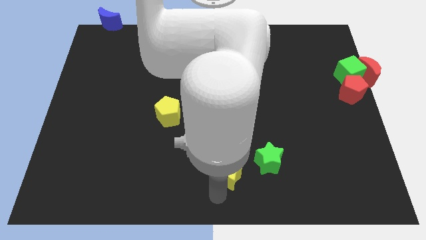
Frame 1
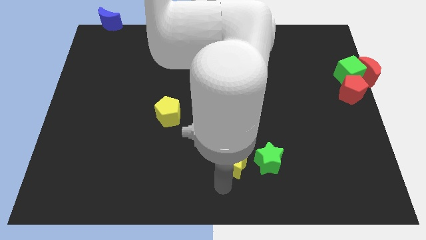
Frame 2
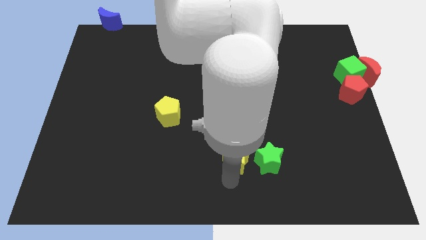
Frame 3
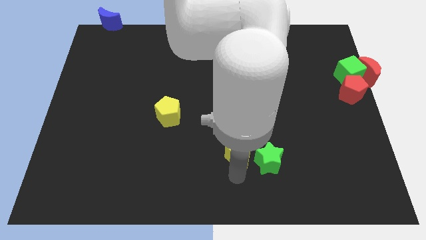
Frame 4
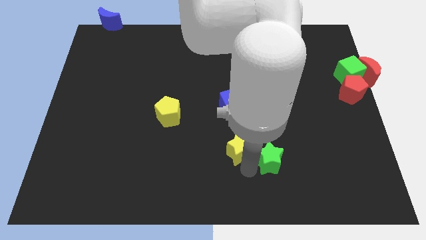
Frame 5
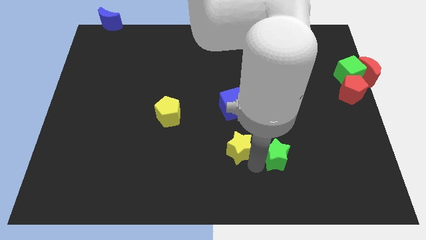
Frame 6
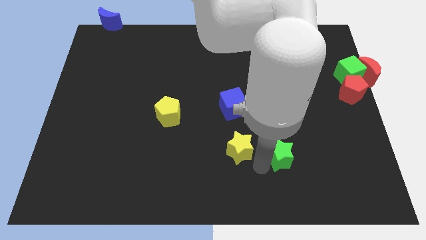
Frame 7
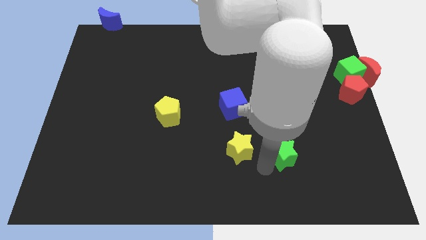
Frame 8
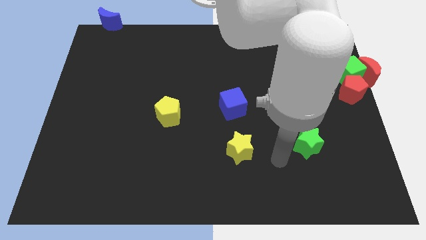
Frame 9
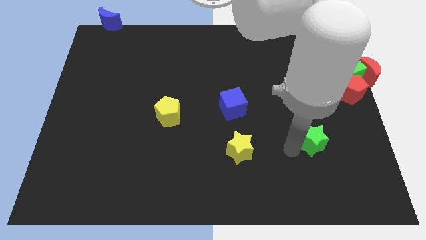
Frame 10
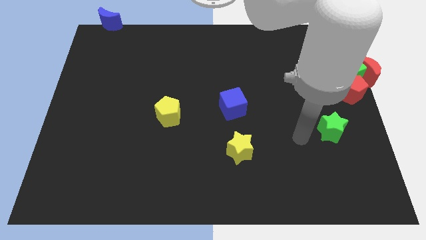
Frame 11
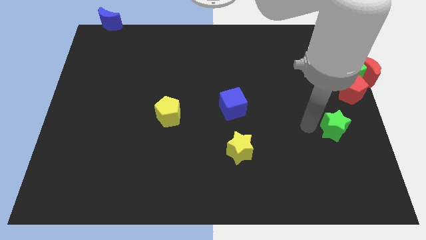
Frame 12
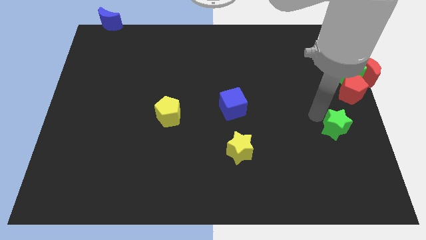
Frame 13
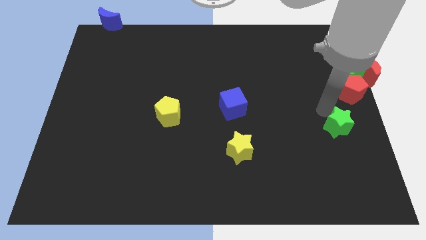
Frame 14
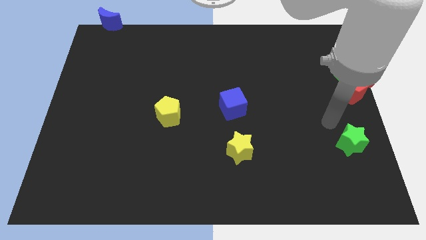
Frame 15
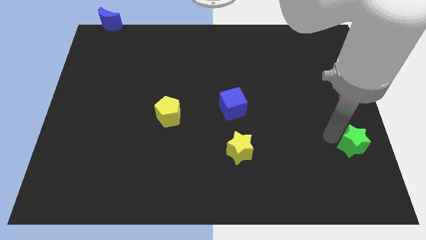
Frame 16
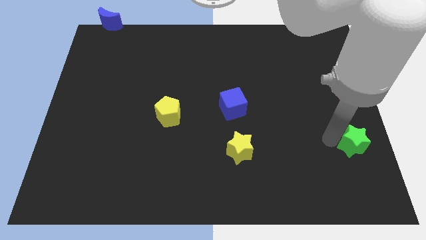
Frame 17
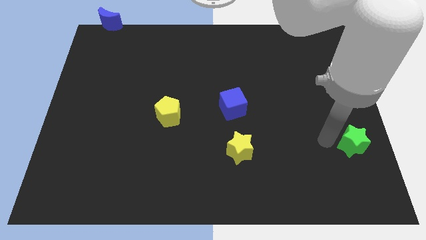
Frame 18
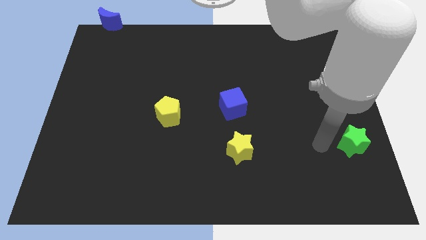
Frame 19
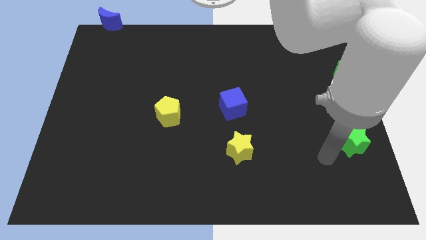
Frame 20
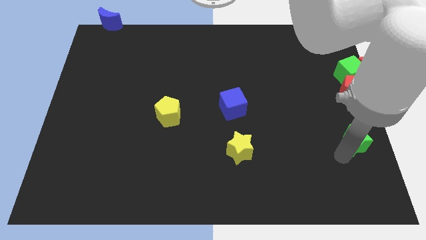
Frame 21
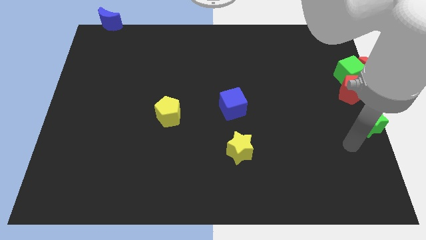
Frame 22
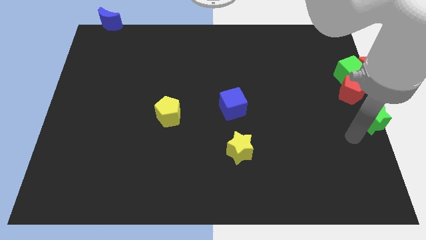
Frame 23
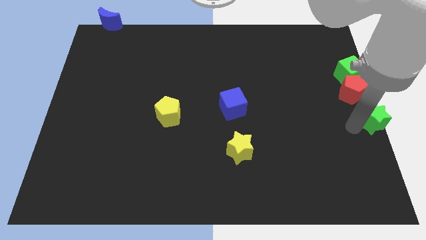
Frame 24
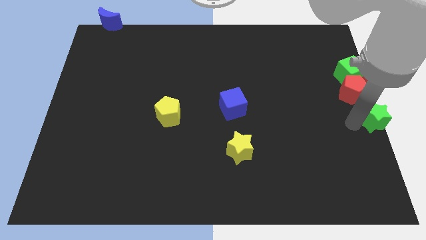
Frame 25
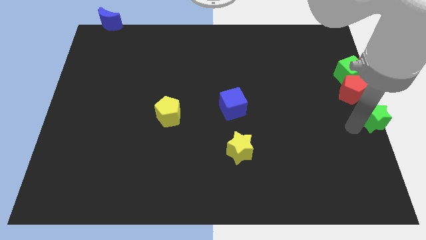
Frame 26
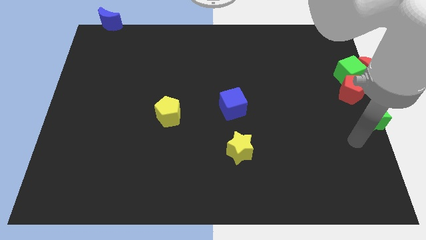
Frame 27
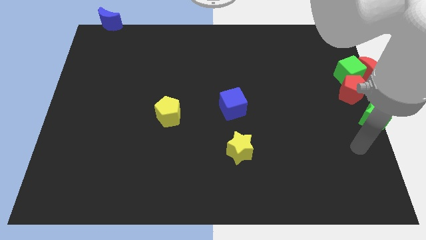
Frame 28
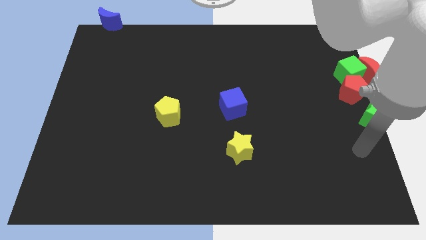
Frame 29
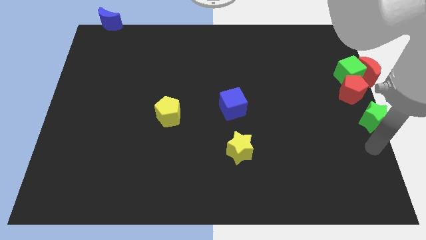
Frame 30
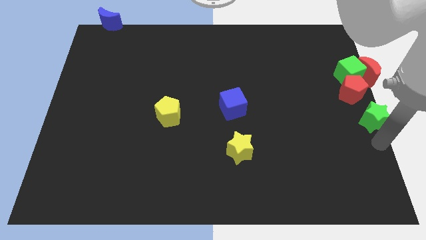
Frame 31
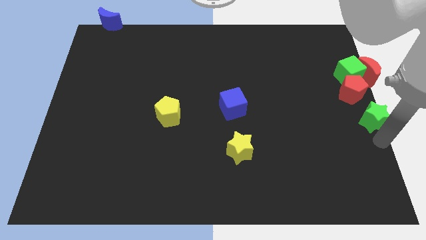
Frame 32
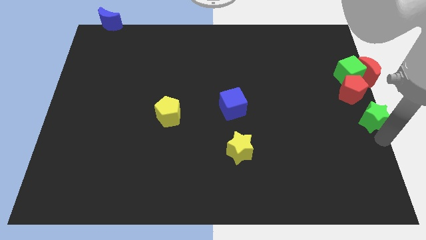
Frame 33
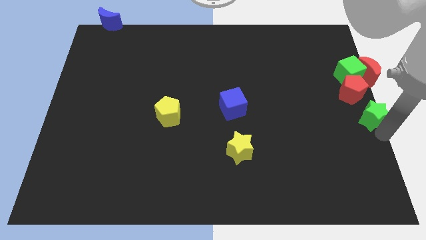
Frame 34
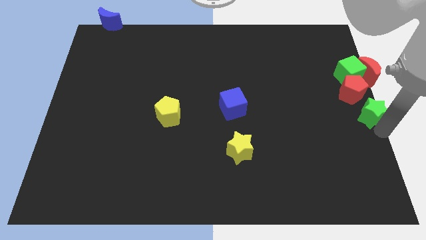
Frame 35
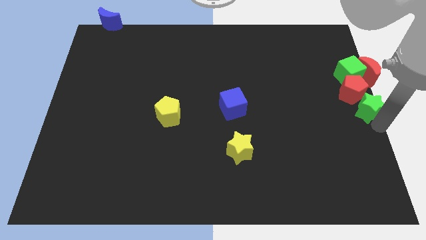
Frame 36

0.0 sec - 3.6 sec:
move the green star into the group of blocks

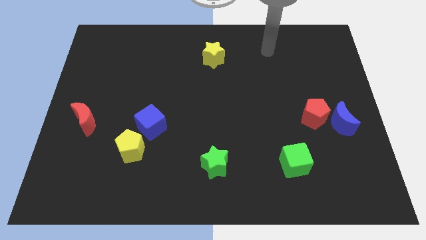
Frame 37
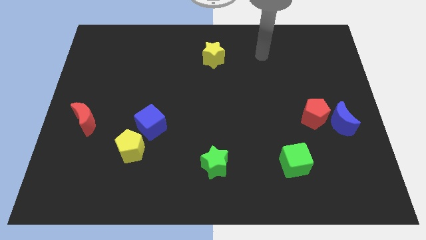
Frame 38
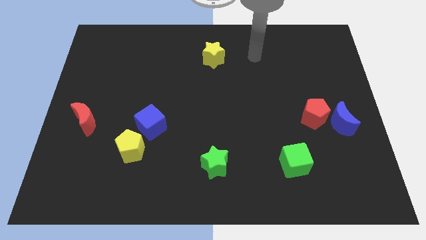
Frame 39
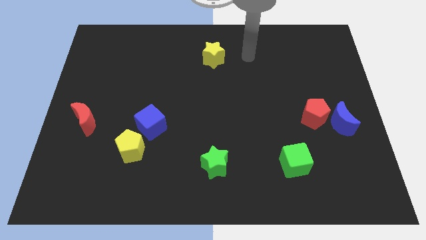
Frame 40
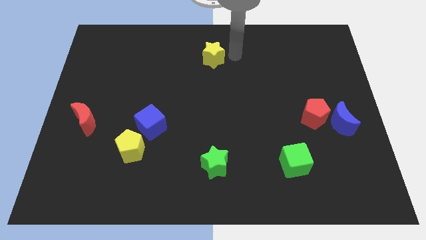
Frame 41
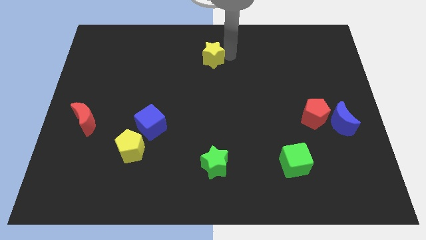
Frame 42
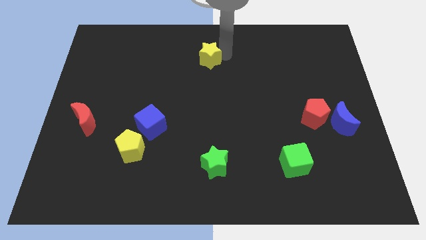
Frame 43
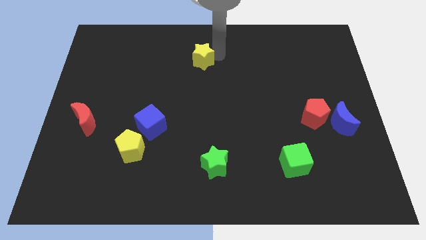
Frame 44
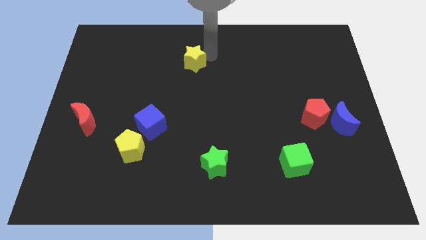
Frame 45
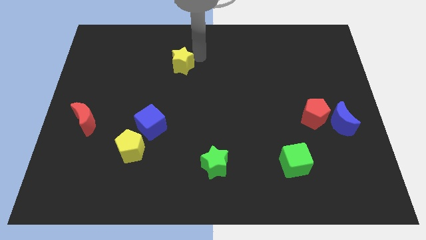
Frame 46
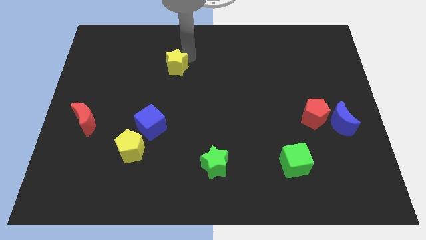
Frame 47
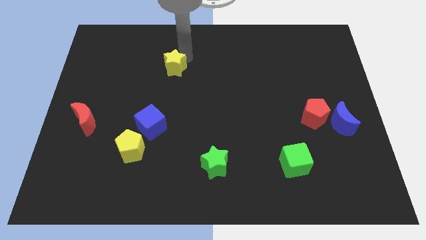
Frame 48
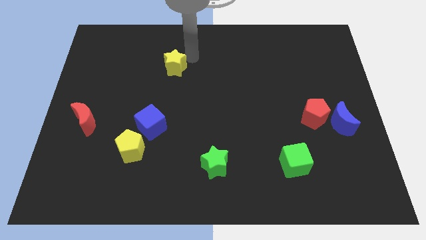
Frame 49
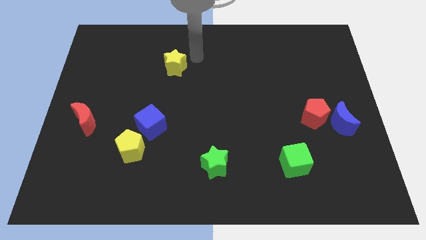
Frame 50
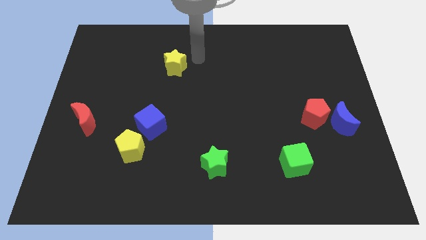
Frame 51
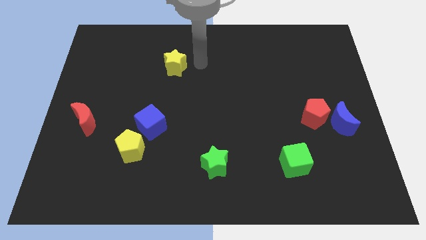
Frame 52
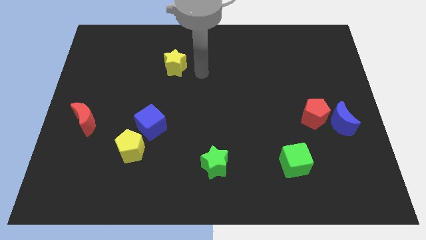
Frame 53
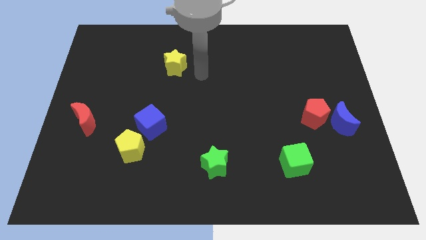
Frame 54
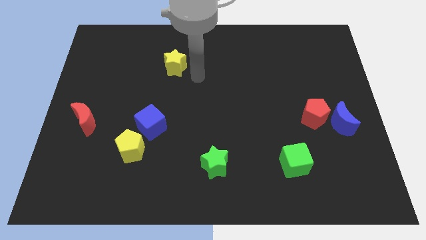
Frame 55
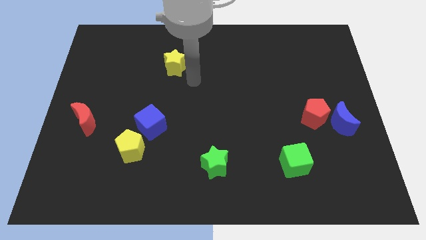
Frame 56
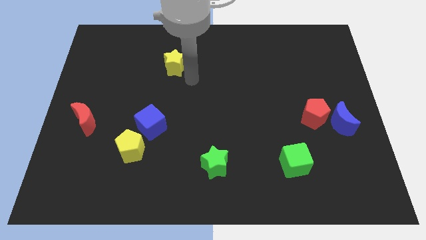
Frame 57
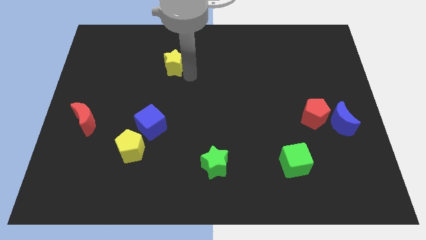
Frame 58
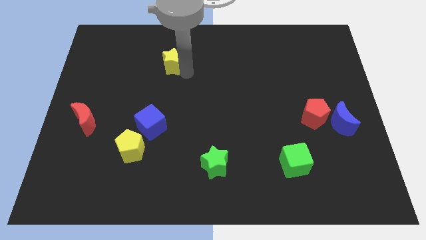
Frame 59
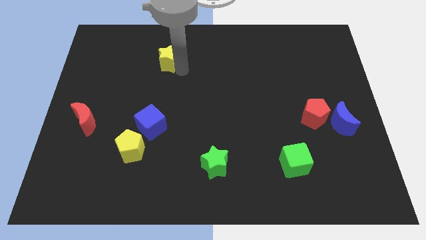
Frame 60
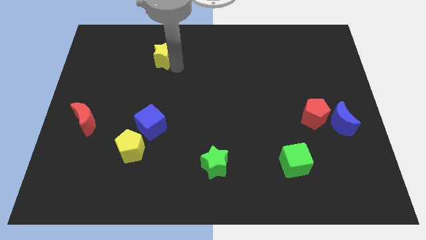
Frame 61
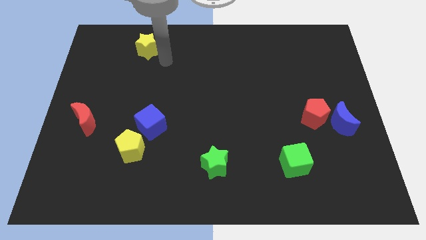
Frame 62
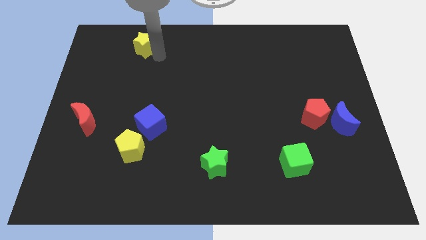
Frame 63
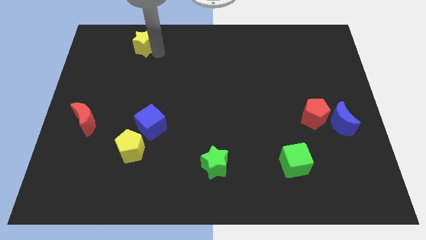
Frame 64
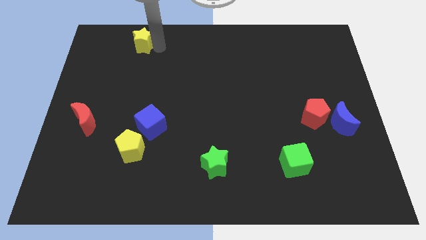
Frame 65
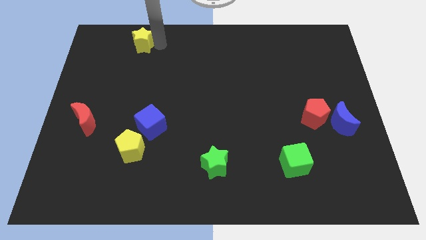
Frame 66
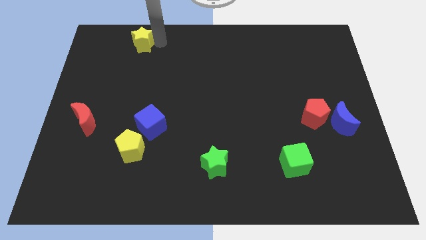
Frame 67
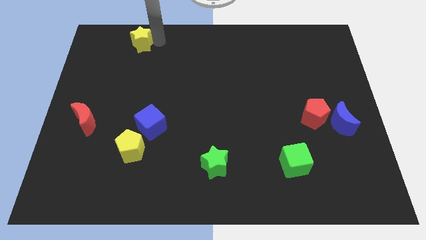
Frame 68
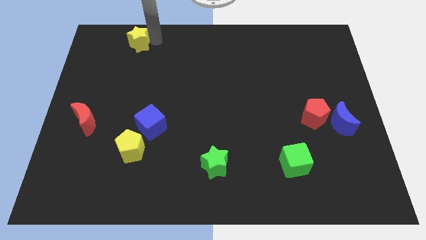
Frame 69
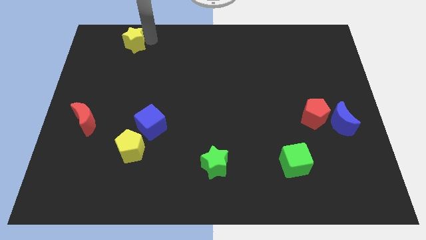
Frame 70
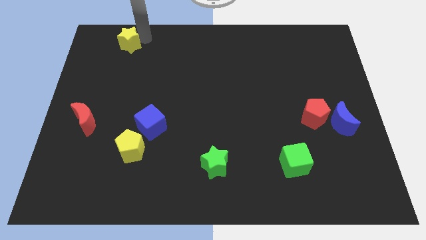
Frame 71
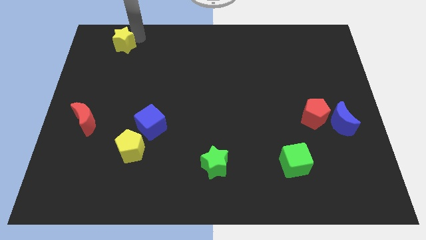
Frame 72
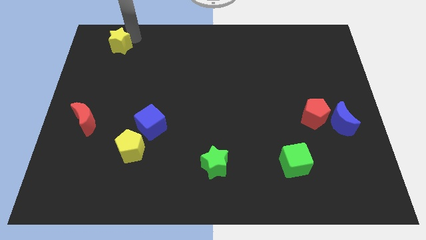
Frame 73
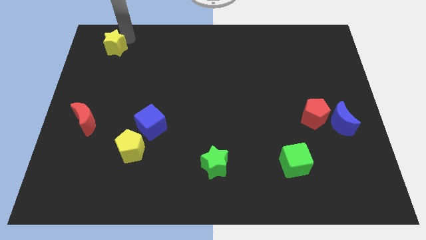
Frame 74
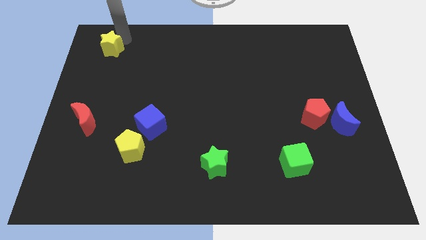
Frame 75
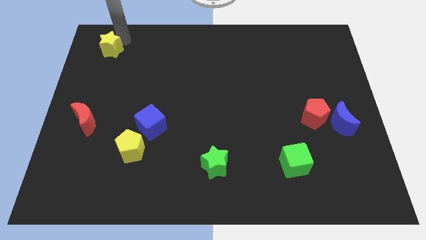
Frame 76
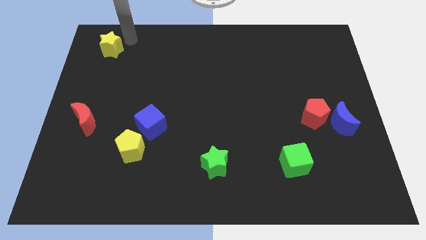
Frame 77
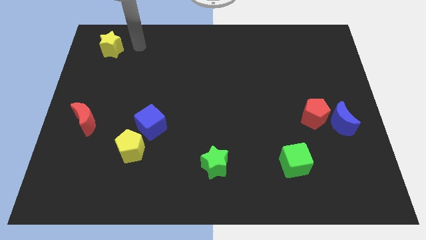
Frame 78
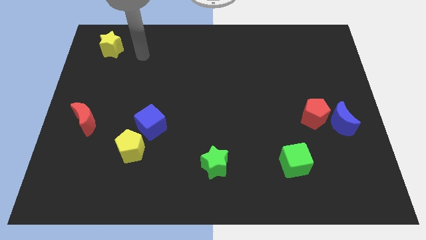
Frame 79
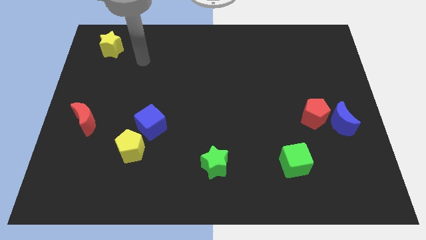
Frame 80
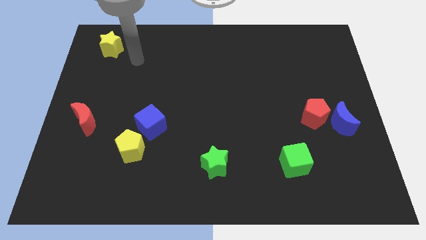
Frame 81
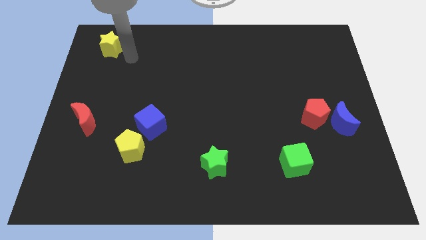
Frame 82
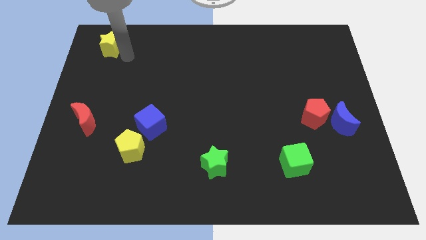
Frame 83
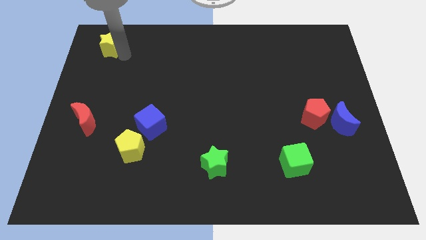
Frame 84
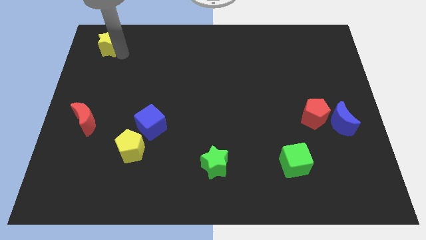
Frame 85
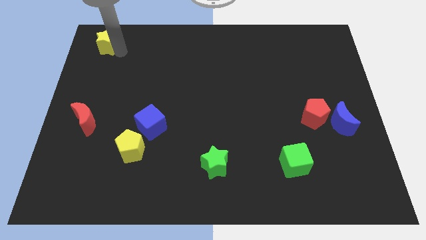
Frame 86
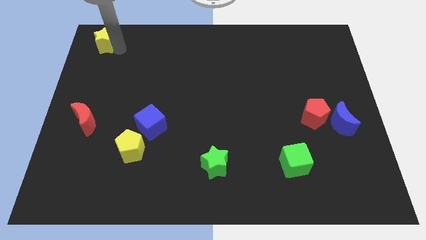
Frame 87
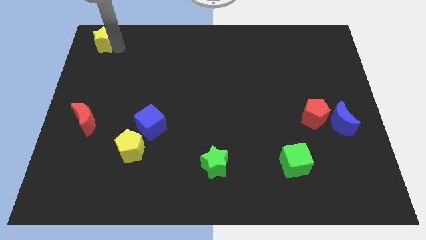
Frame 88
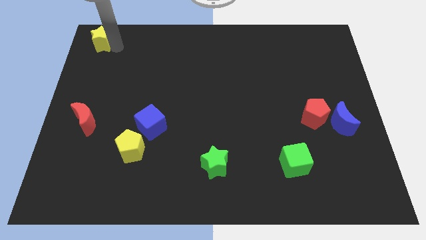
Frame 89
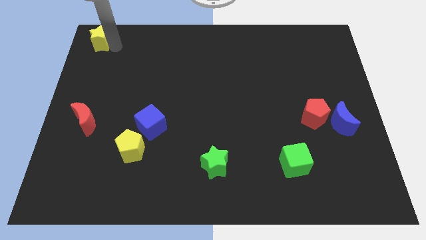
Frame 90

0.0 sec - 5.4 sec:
move the yellow star to the top left of the corner
